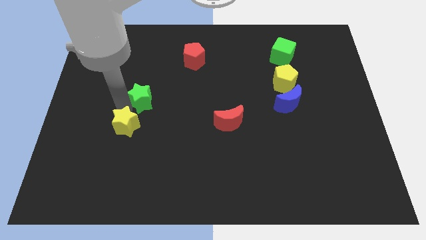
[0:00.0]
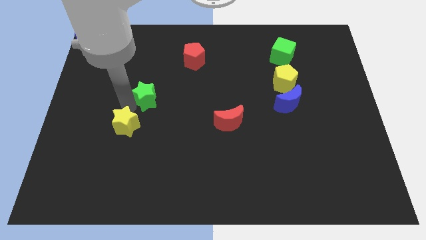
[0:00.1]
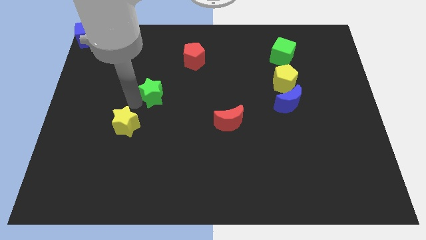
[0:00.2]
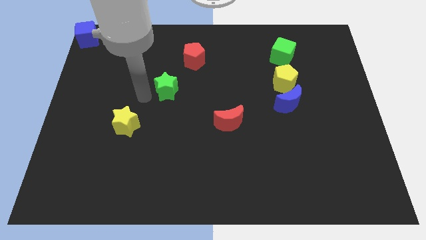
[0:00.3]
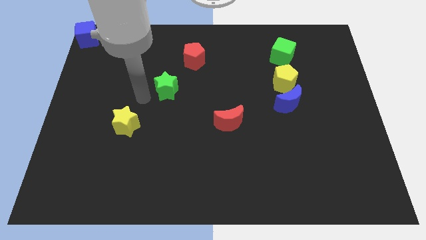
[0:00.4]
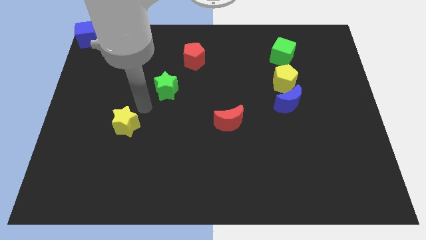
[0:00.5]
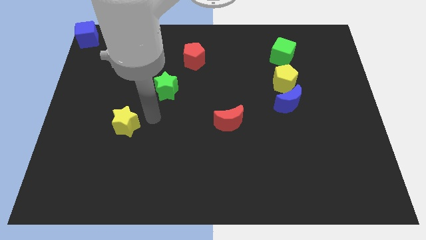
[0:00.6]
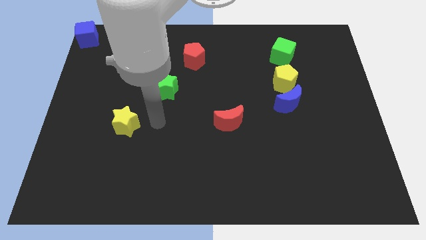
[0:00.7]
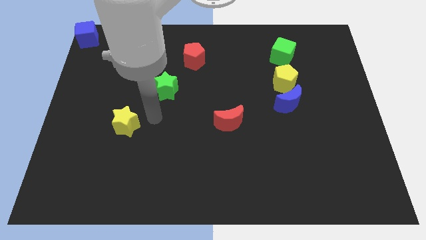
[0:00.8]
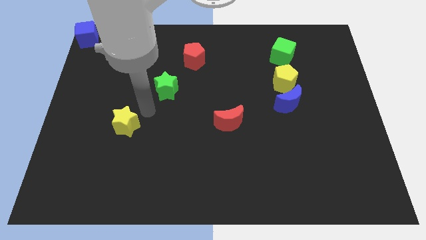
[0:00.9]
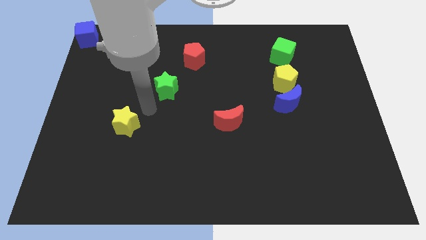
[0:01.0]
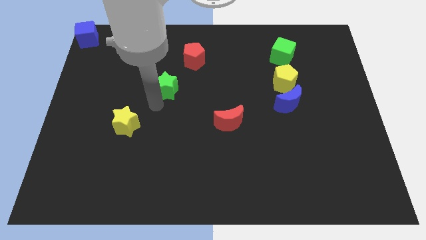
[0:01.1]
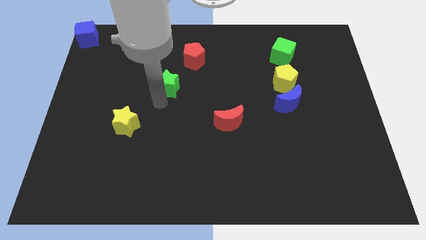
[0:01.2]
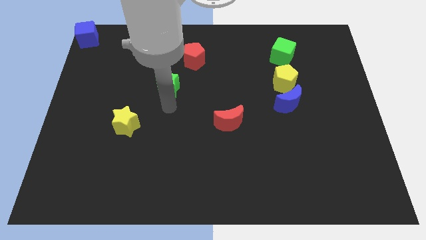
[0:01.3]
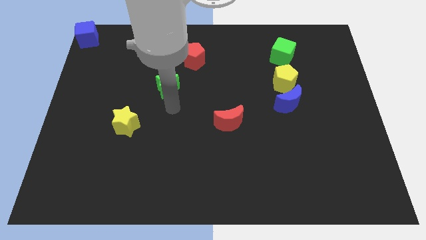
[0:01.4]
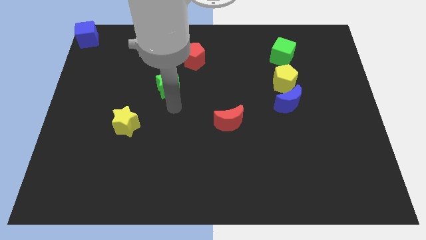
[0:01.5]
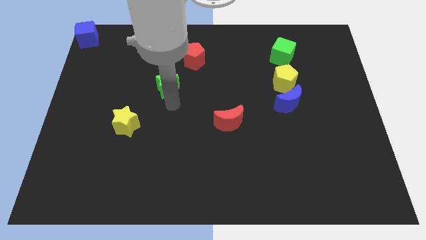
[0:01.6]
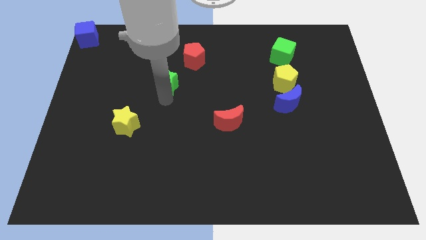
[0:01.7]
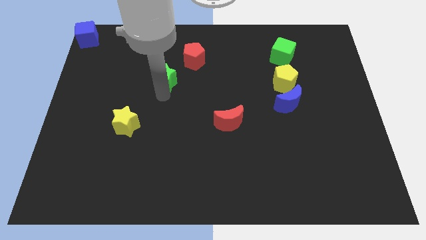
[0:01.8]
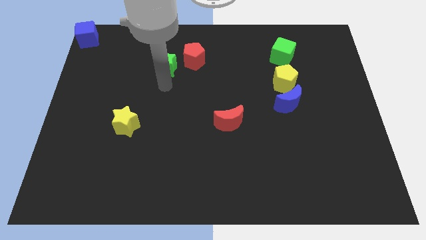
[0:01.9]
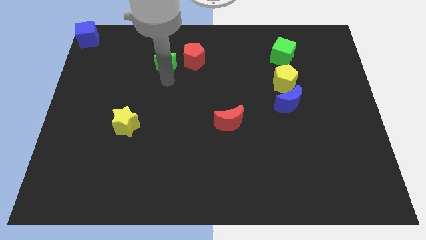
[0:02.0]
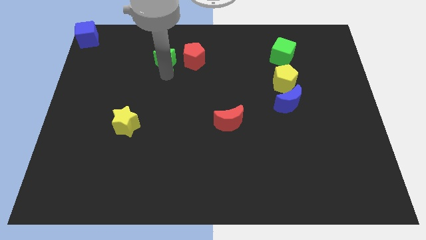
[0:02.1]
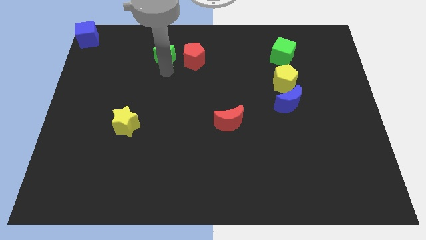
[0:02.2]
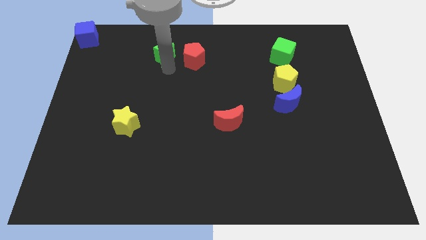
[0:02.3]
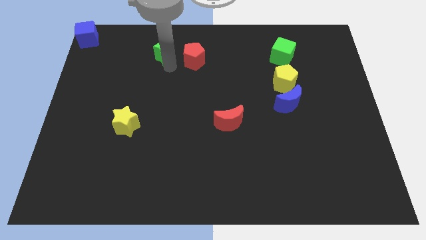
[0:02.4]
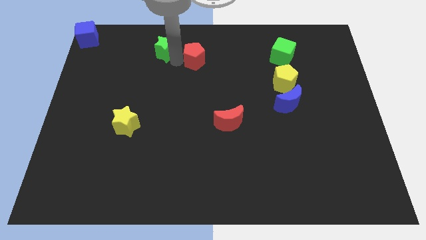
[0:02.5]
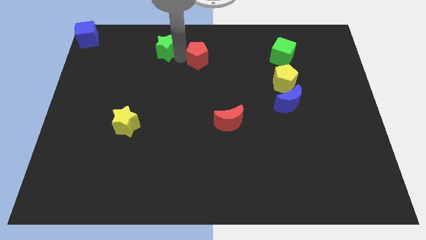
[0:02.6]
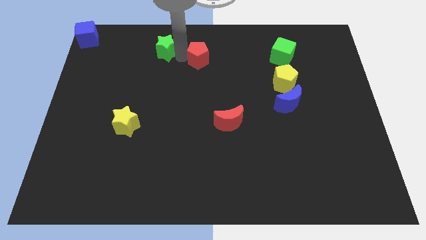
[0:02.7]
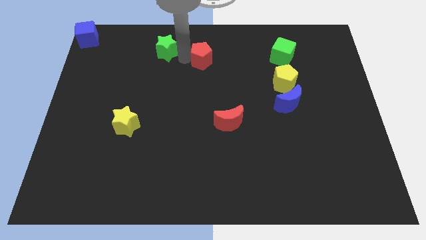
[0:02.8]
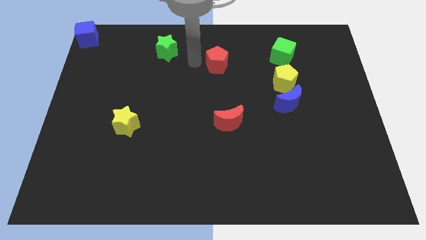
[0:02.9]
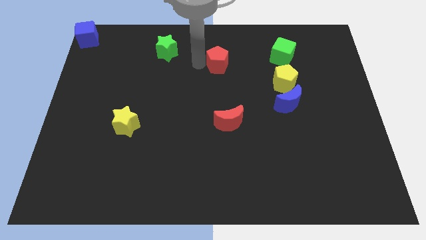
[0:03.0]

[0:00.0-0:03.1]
place the green star left to the red pentagon

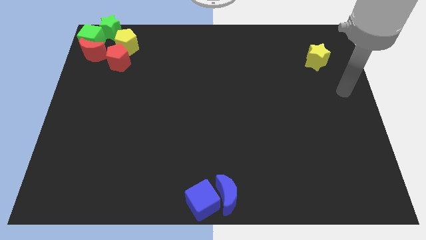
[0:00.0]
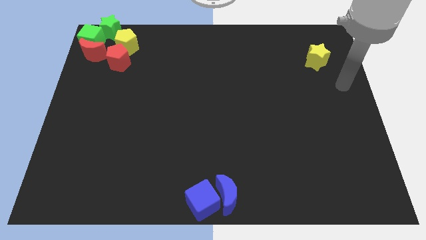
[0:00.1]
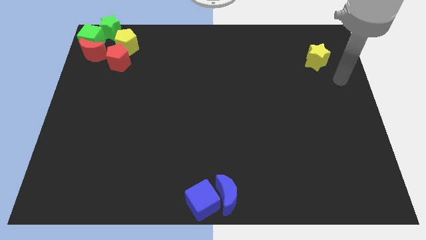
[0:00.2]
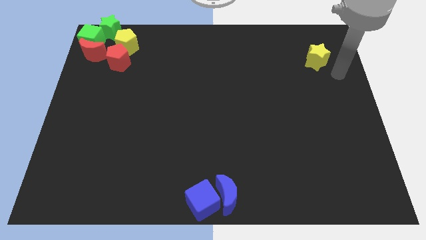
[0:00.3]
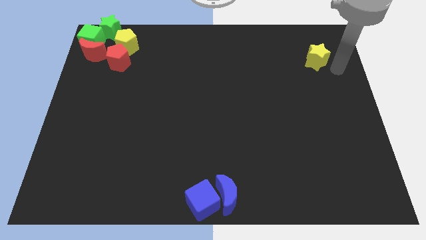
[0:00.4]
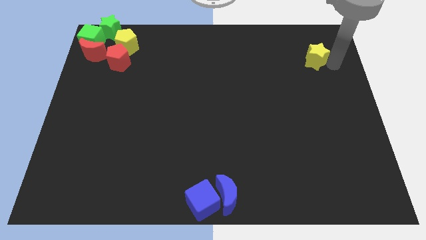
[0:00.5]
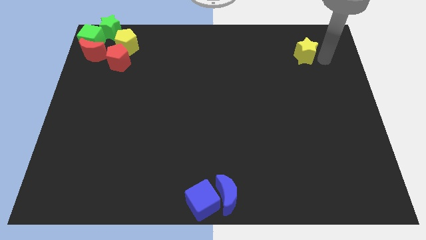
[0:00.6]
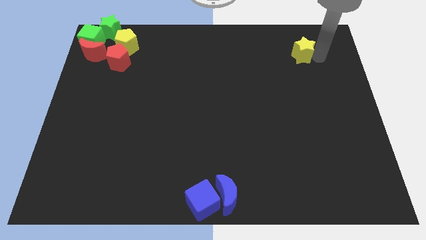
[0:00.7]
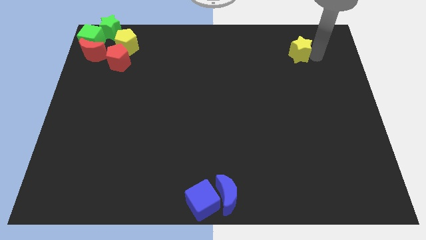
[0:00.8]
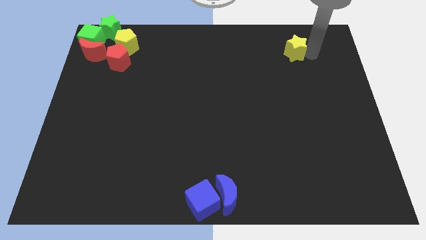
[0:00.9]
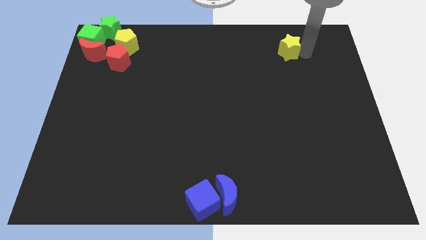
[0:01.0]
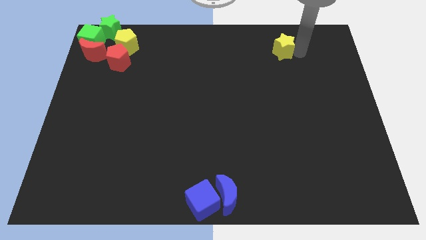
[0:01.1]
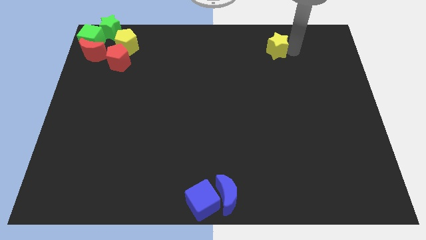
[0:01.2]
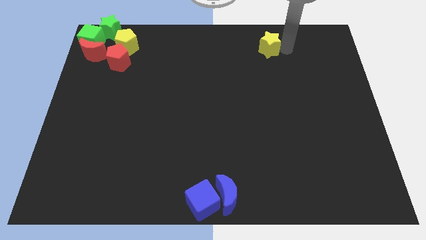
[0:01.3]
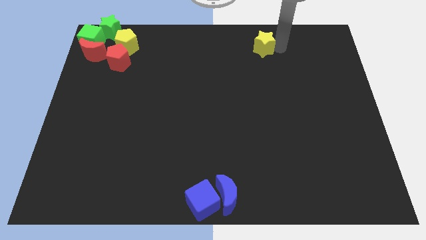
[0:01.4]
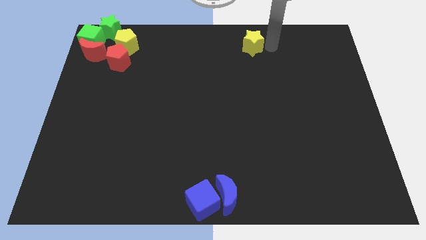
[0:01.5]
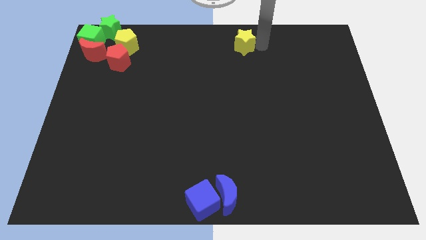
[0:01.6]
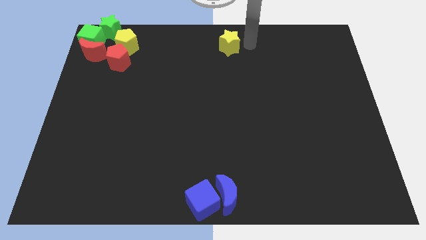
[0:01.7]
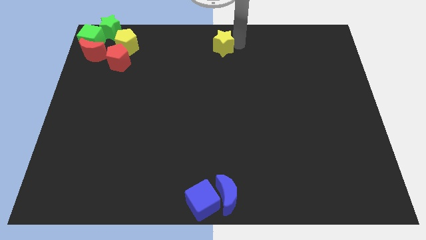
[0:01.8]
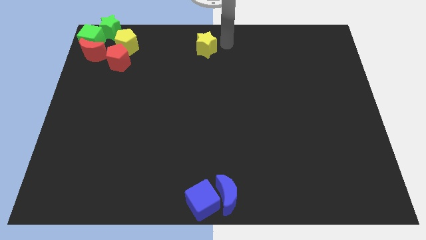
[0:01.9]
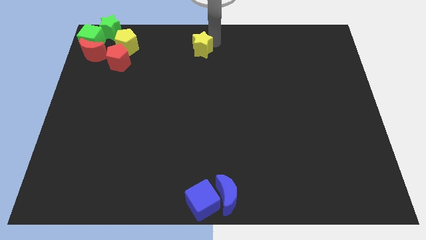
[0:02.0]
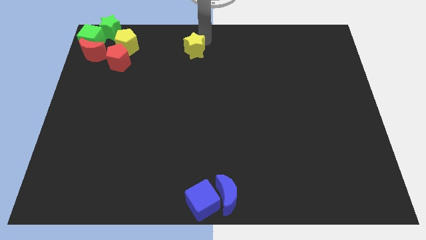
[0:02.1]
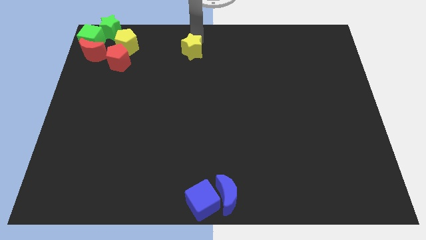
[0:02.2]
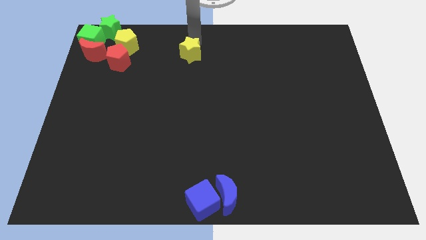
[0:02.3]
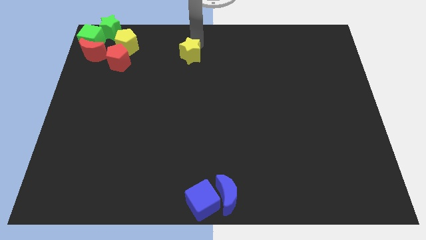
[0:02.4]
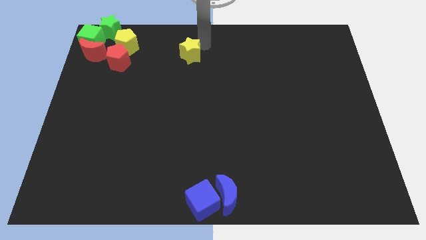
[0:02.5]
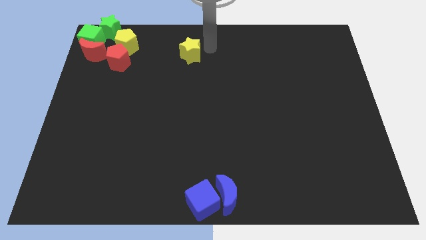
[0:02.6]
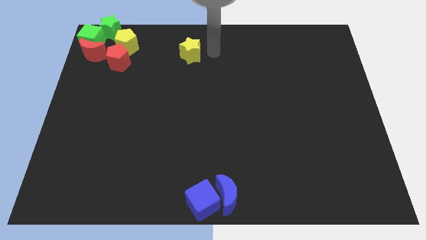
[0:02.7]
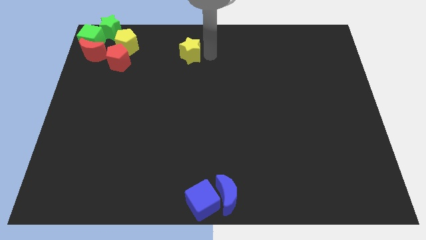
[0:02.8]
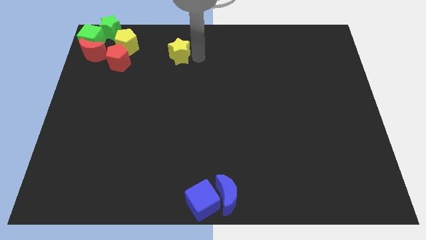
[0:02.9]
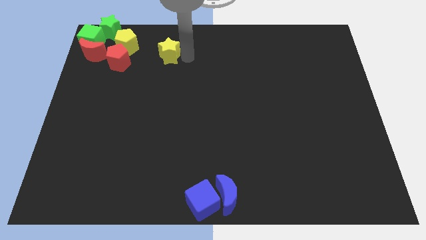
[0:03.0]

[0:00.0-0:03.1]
move yellow star towards yellow pentagon

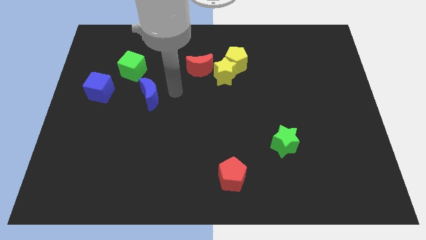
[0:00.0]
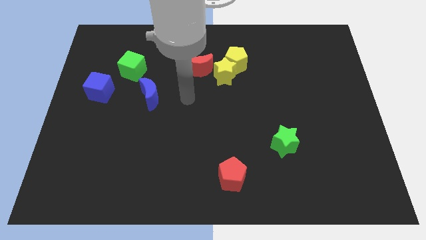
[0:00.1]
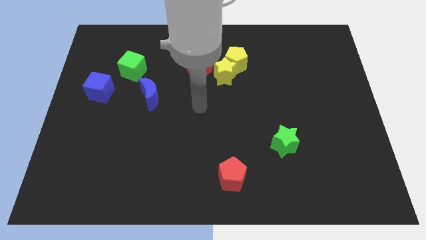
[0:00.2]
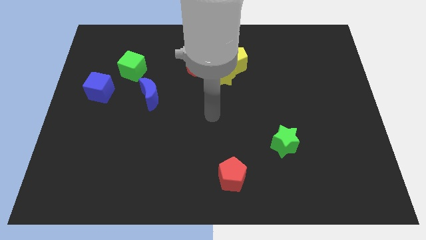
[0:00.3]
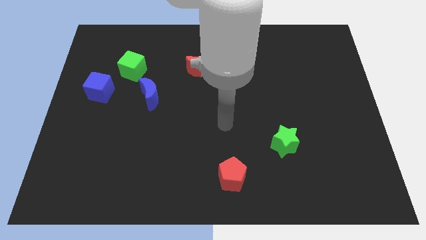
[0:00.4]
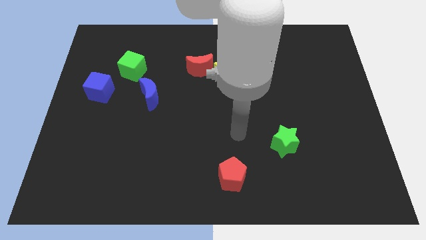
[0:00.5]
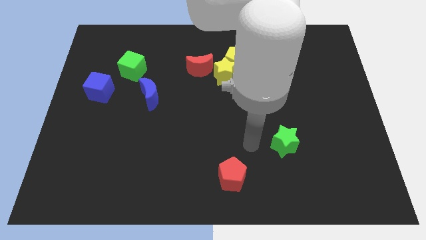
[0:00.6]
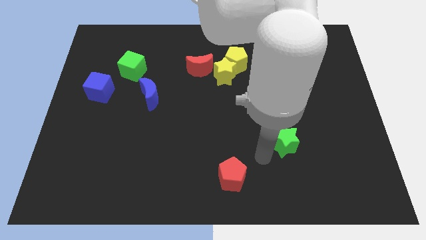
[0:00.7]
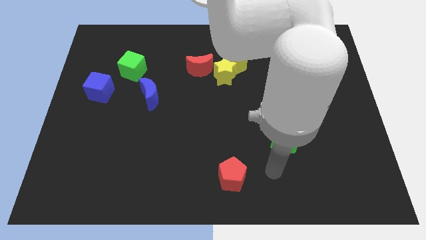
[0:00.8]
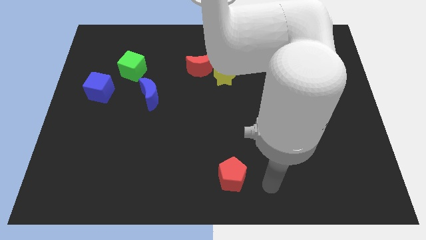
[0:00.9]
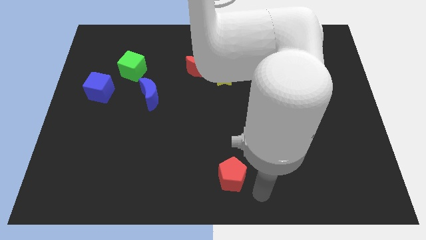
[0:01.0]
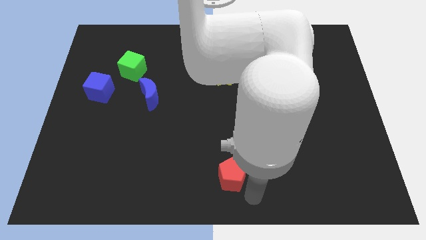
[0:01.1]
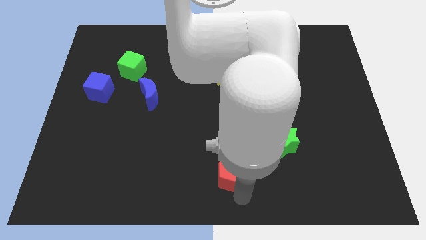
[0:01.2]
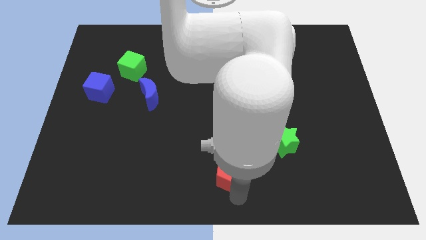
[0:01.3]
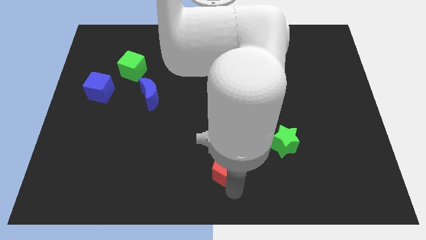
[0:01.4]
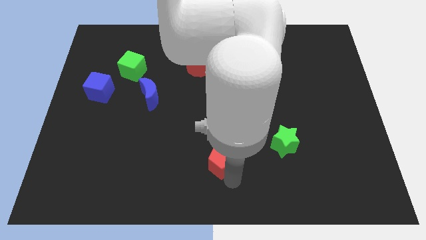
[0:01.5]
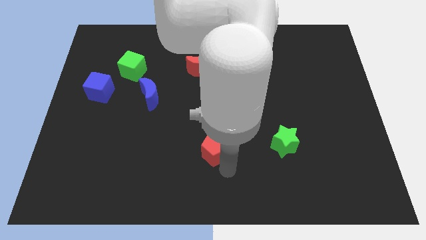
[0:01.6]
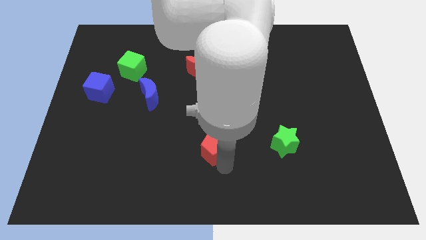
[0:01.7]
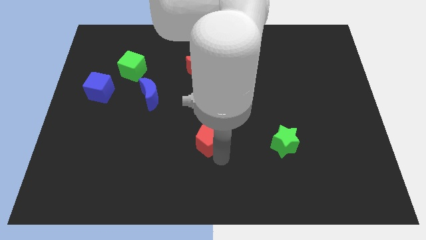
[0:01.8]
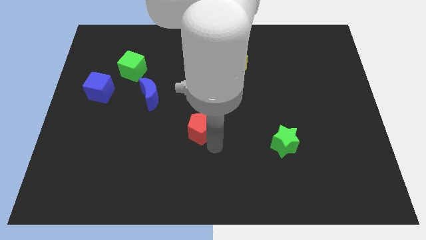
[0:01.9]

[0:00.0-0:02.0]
place the red pentagon parallel to green star

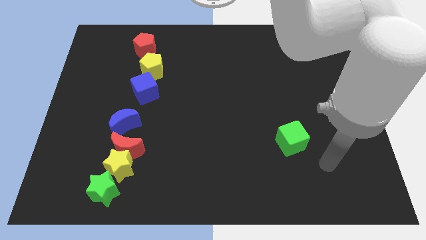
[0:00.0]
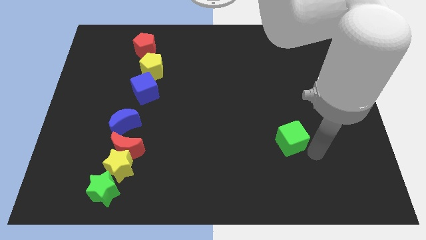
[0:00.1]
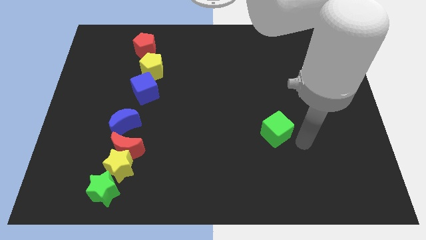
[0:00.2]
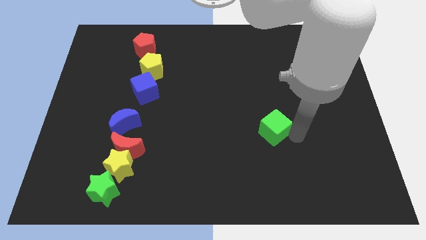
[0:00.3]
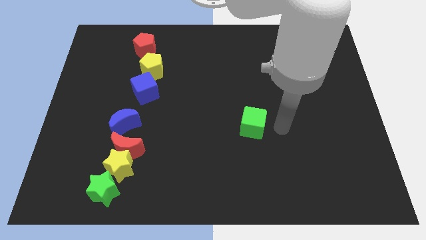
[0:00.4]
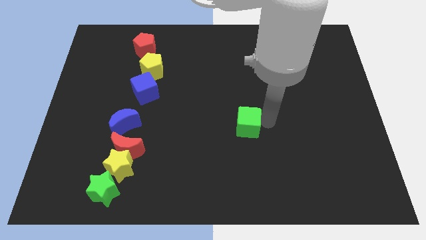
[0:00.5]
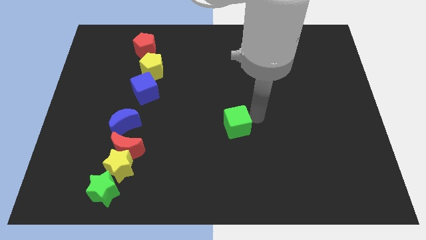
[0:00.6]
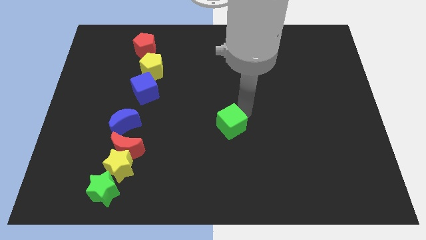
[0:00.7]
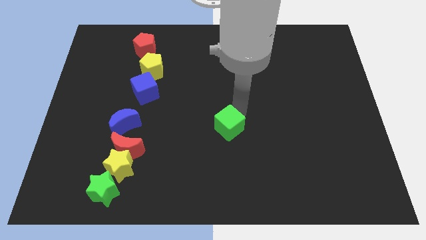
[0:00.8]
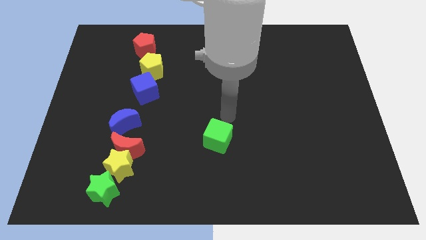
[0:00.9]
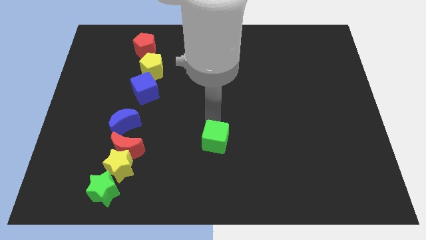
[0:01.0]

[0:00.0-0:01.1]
push the green cube towards the left side of the board
